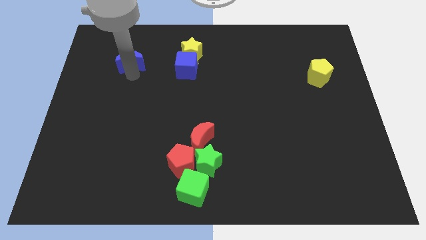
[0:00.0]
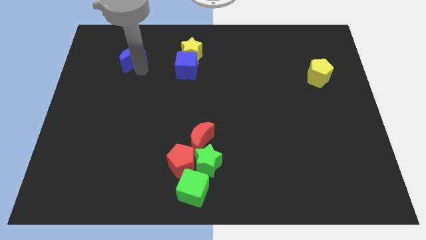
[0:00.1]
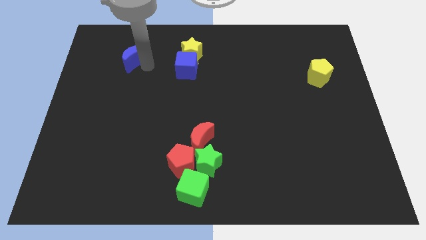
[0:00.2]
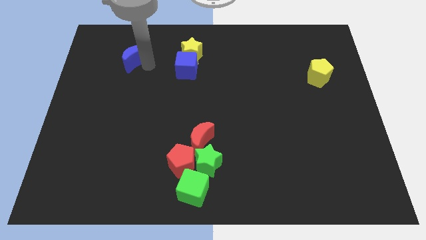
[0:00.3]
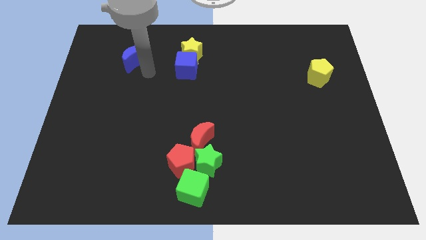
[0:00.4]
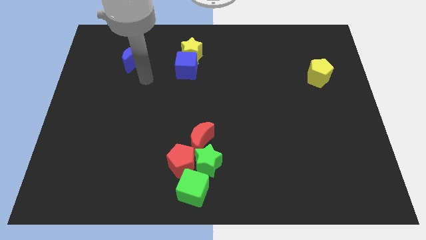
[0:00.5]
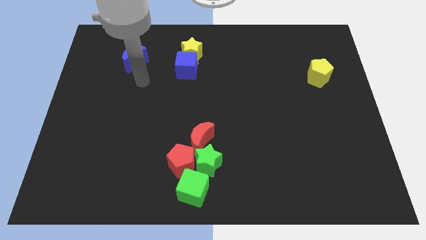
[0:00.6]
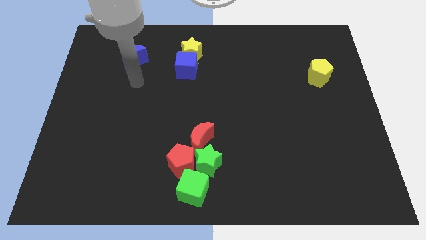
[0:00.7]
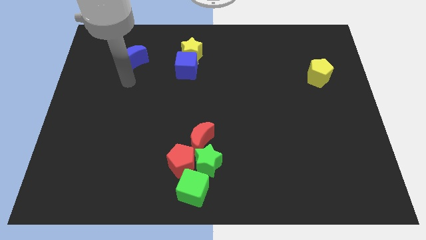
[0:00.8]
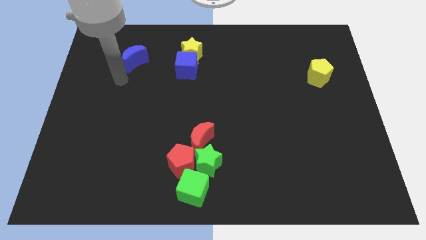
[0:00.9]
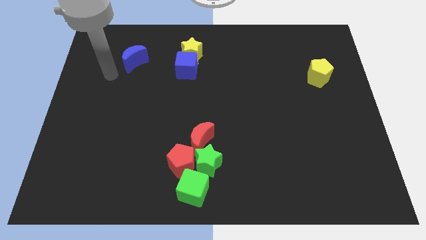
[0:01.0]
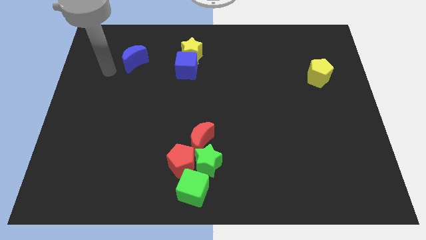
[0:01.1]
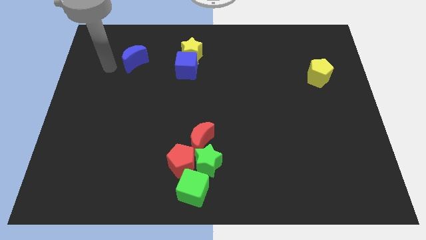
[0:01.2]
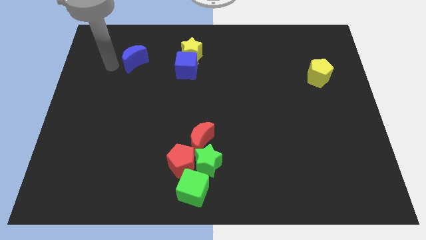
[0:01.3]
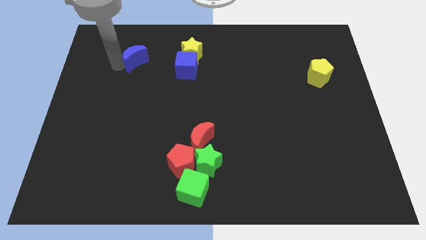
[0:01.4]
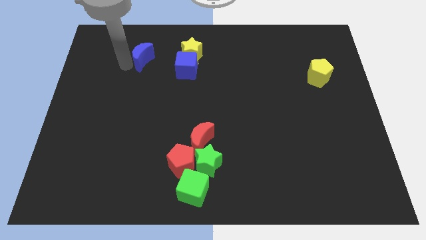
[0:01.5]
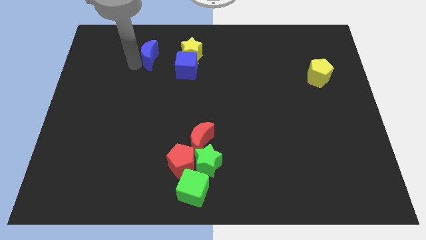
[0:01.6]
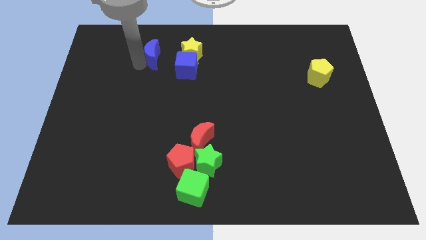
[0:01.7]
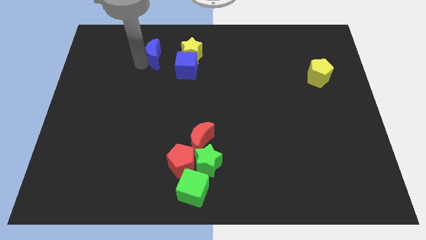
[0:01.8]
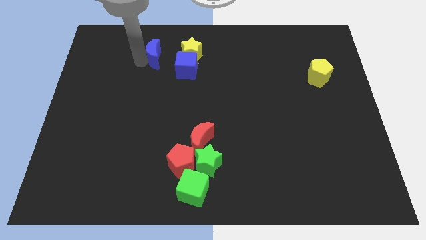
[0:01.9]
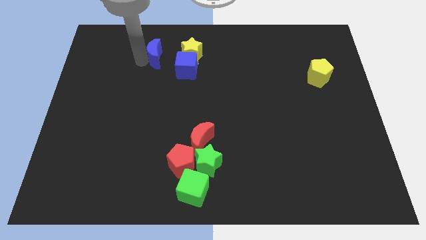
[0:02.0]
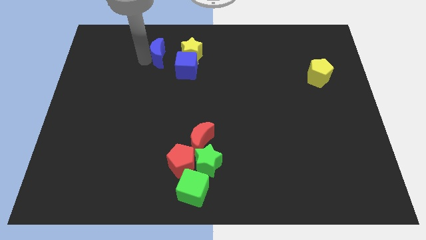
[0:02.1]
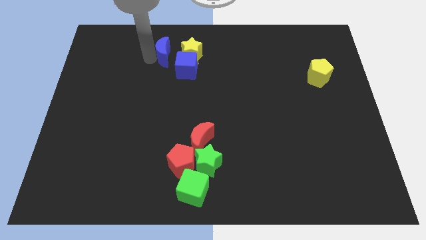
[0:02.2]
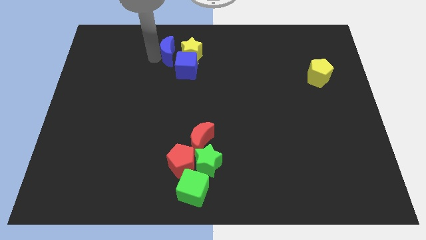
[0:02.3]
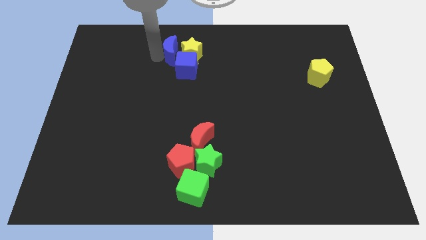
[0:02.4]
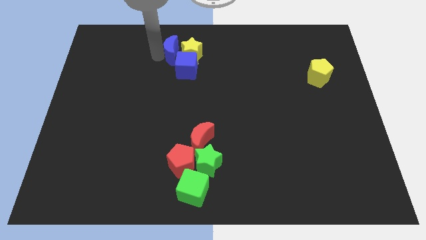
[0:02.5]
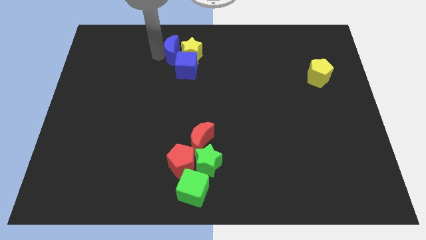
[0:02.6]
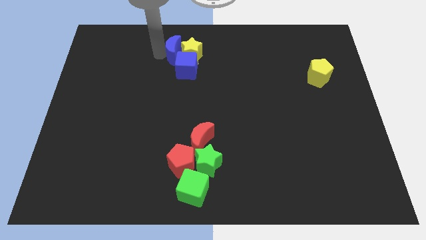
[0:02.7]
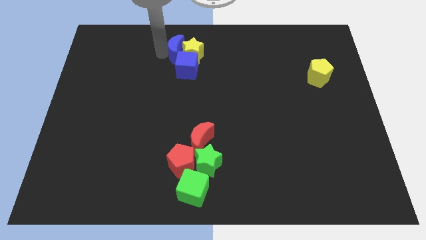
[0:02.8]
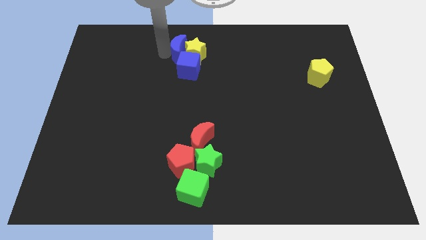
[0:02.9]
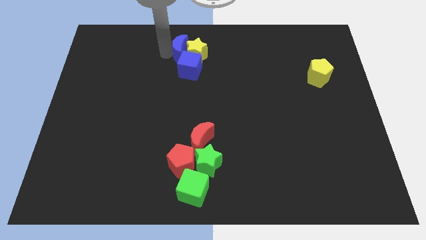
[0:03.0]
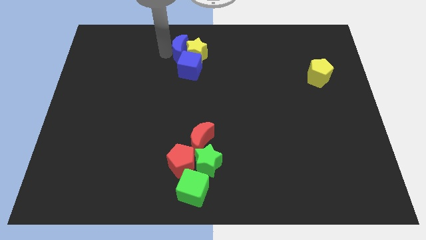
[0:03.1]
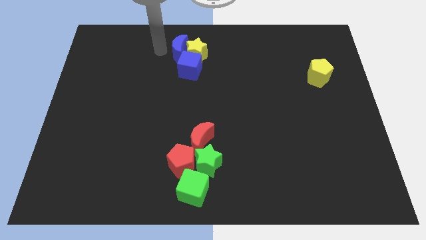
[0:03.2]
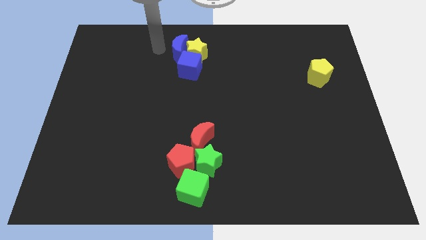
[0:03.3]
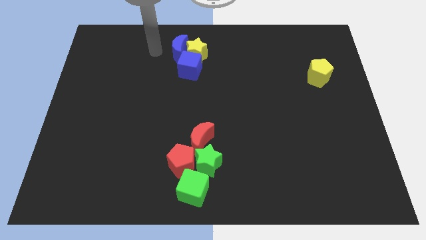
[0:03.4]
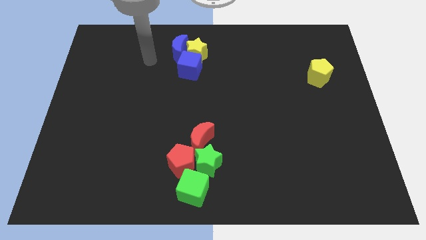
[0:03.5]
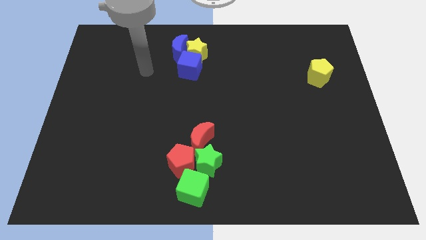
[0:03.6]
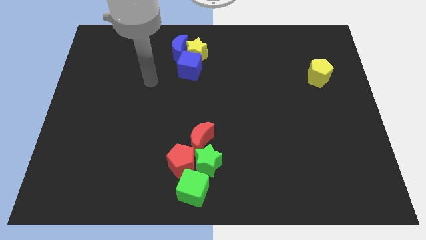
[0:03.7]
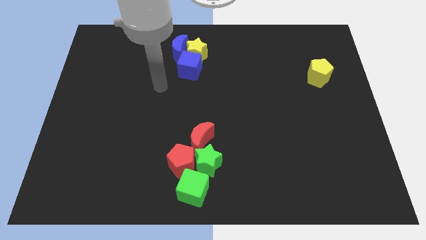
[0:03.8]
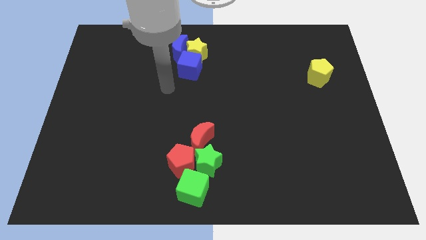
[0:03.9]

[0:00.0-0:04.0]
push the blue crescent into the yellow star

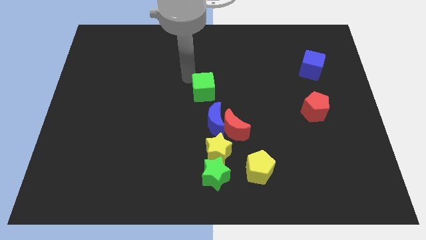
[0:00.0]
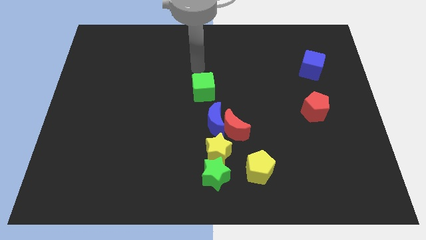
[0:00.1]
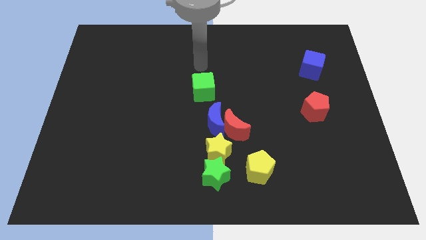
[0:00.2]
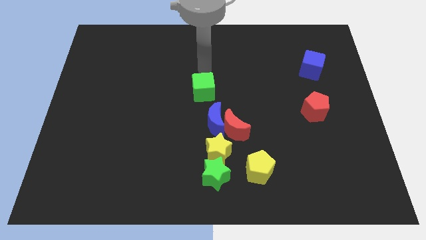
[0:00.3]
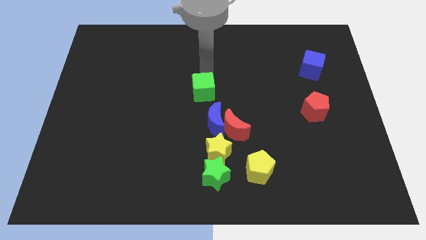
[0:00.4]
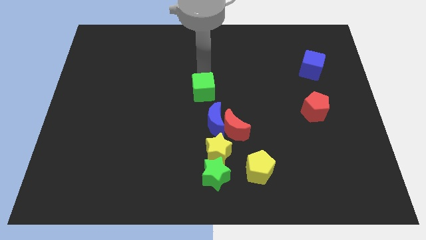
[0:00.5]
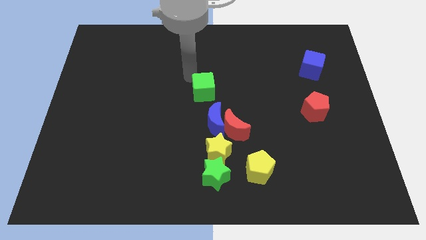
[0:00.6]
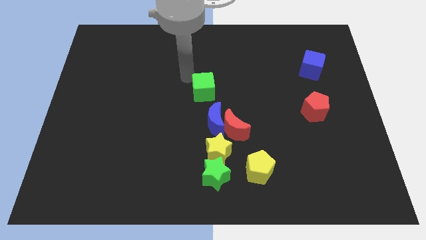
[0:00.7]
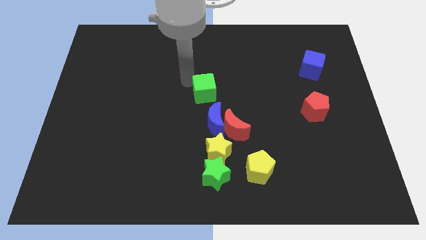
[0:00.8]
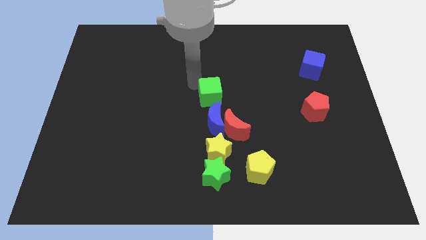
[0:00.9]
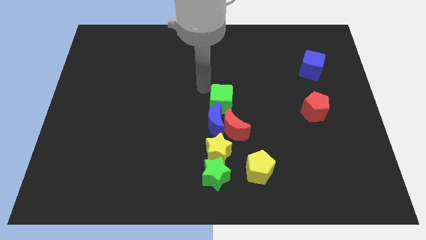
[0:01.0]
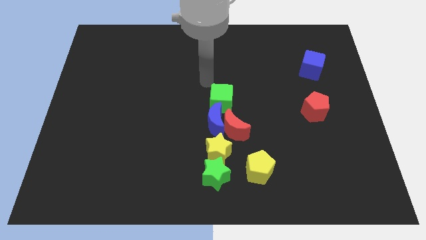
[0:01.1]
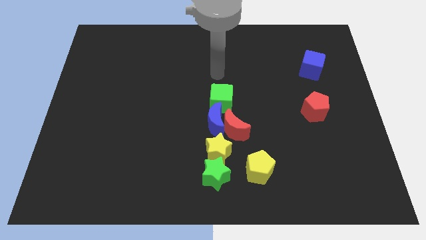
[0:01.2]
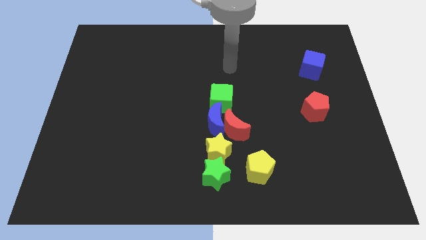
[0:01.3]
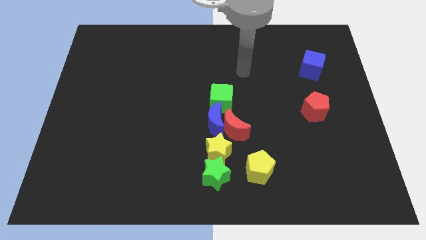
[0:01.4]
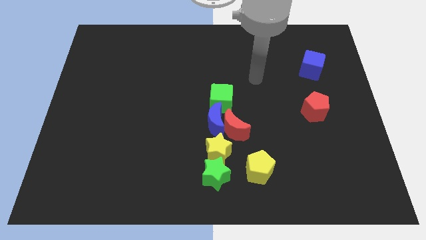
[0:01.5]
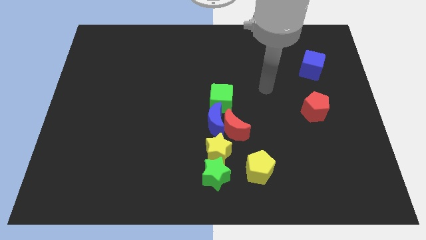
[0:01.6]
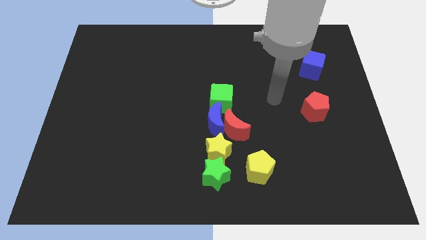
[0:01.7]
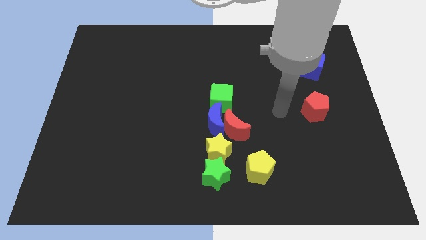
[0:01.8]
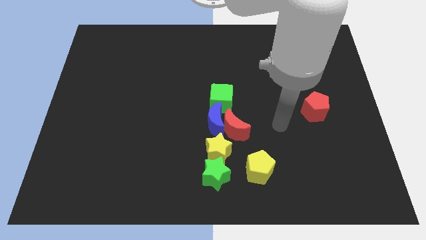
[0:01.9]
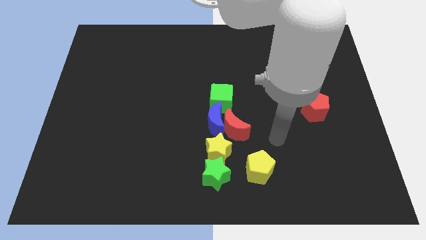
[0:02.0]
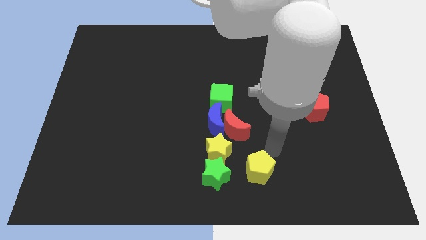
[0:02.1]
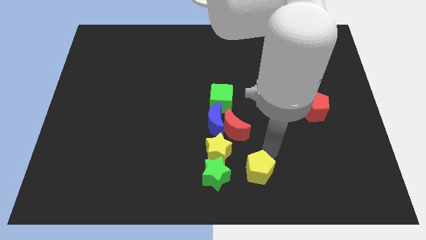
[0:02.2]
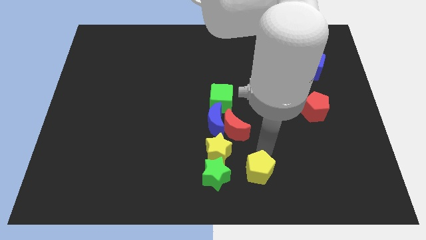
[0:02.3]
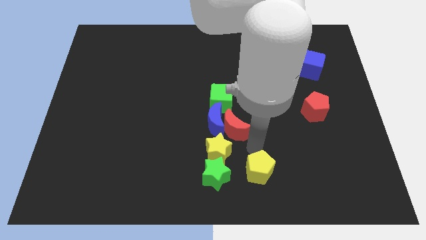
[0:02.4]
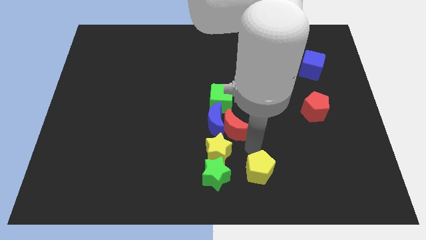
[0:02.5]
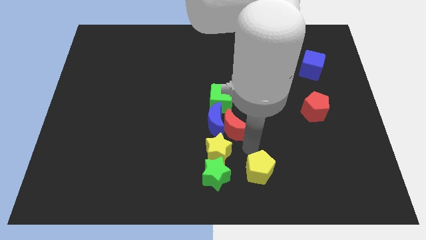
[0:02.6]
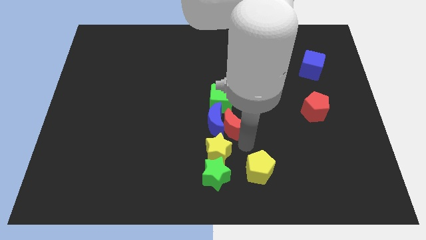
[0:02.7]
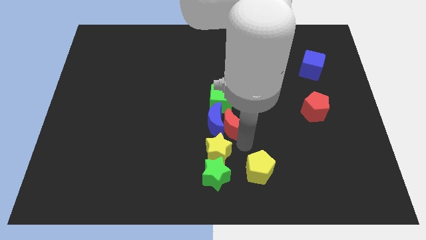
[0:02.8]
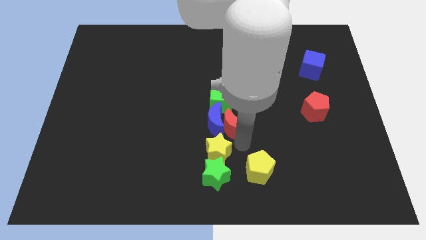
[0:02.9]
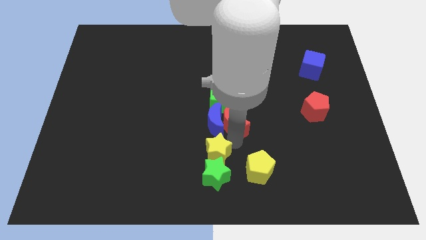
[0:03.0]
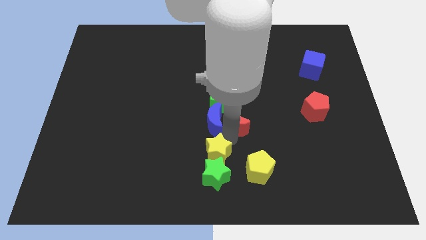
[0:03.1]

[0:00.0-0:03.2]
place your arm in between the red moon and the yellow pentagon

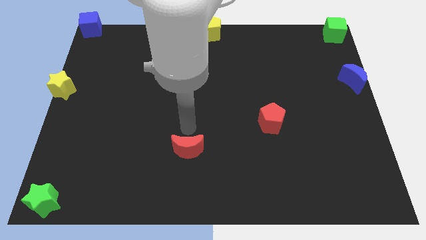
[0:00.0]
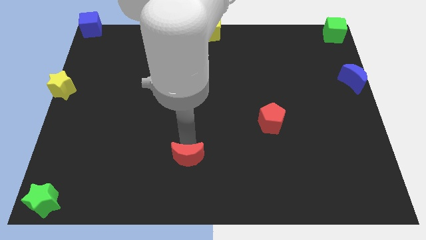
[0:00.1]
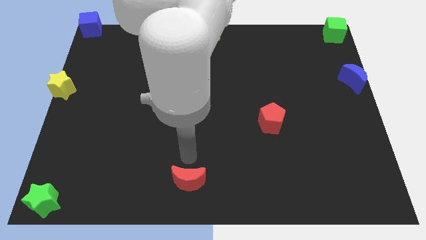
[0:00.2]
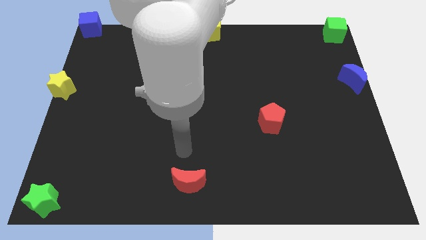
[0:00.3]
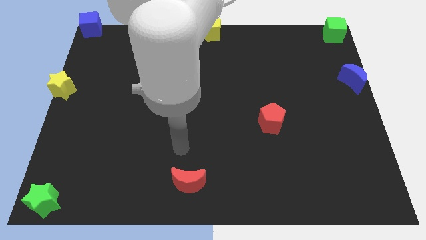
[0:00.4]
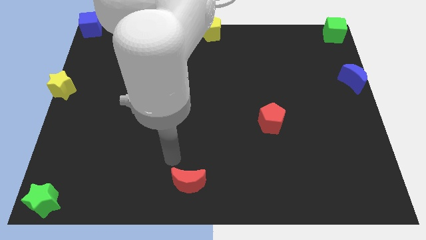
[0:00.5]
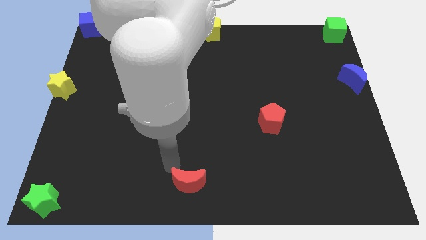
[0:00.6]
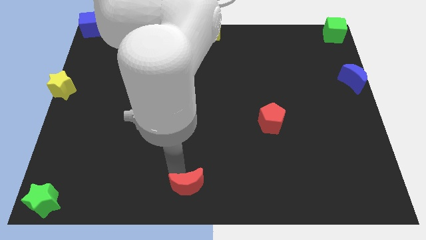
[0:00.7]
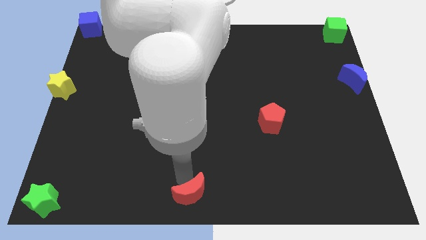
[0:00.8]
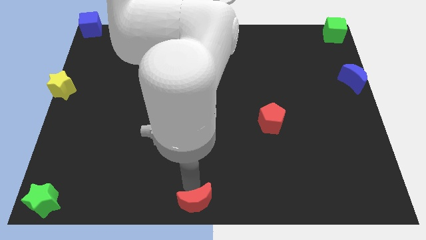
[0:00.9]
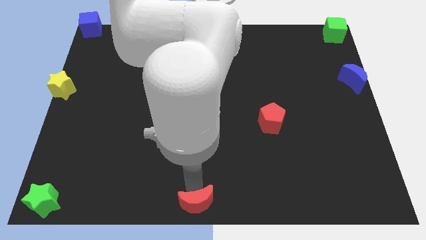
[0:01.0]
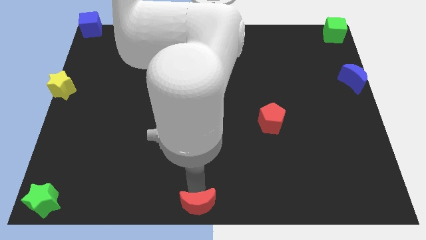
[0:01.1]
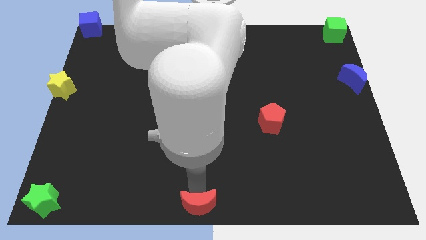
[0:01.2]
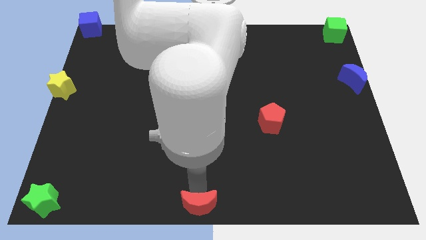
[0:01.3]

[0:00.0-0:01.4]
push the red crescent to the bottom center of the board

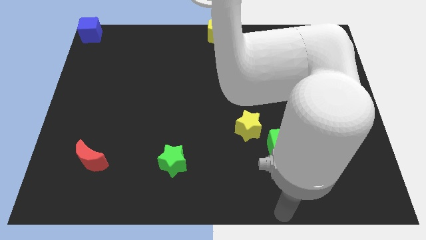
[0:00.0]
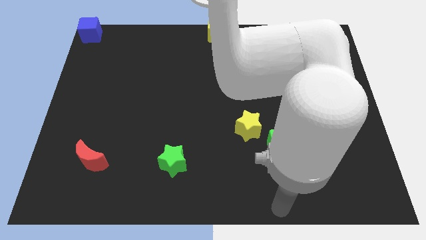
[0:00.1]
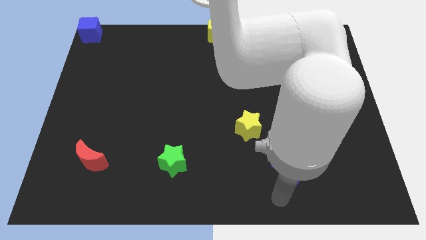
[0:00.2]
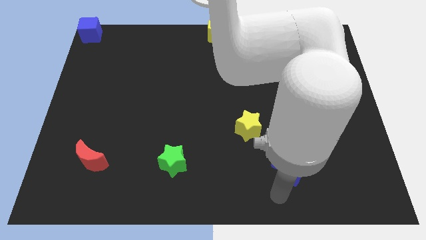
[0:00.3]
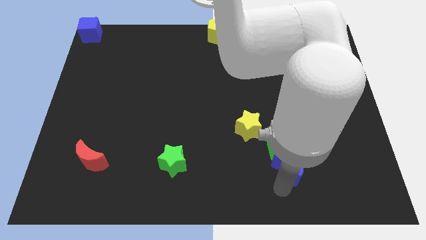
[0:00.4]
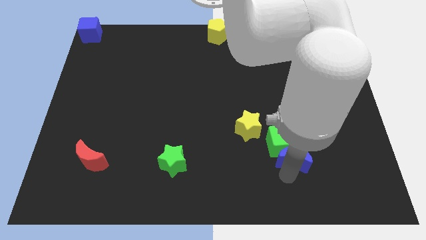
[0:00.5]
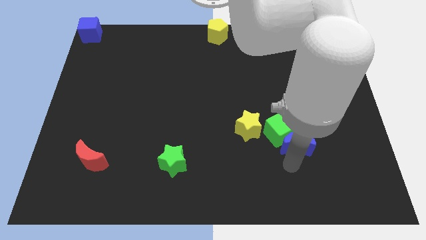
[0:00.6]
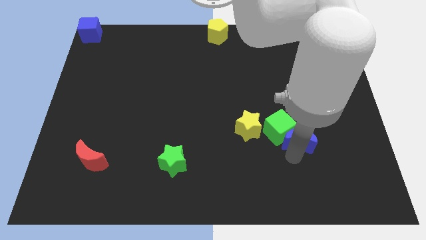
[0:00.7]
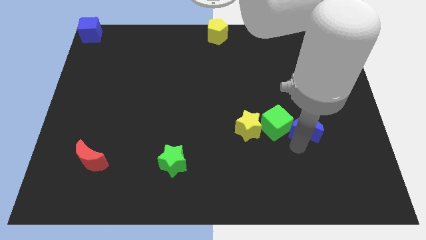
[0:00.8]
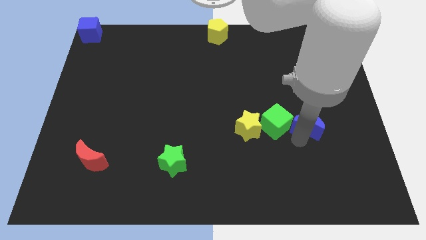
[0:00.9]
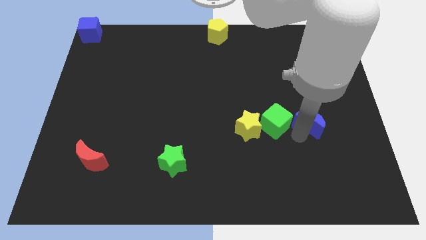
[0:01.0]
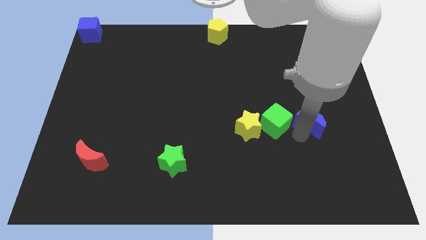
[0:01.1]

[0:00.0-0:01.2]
push the blue crescent to the right of the green cube
